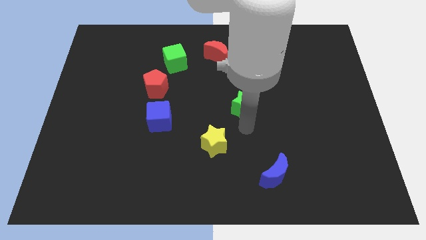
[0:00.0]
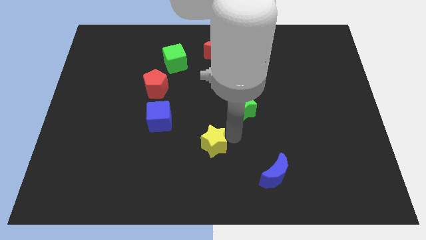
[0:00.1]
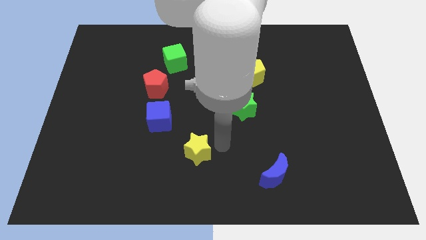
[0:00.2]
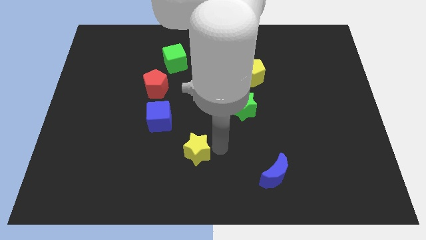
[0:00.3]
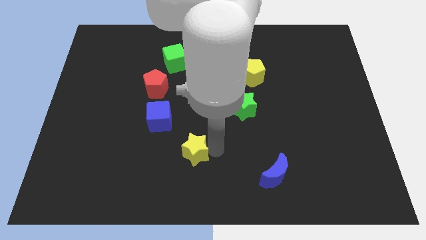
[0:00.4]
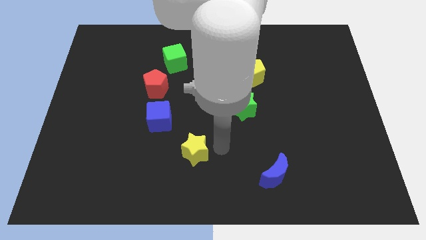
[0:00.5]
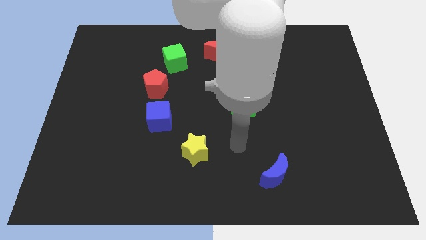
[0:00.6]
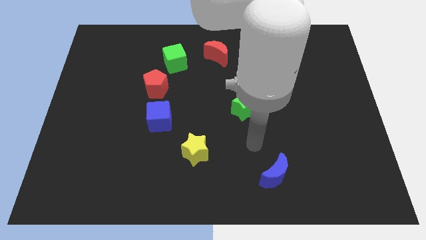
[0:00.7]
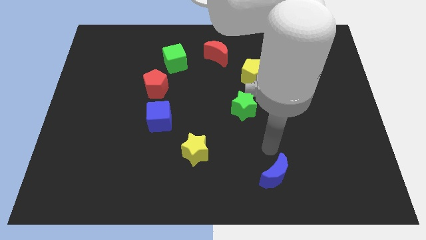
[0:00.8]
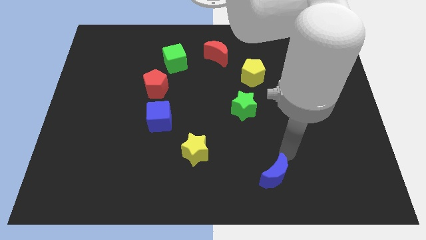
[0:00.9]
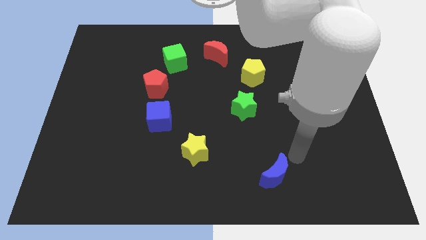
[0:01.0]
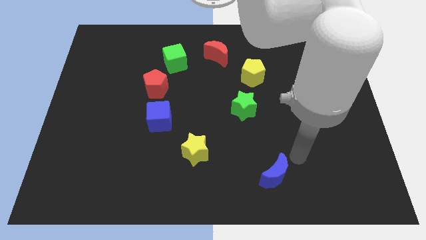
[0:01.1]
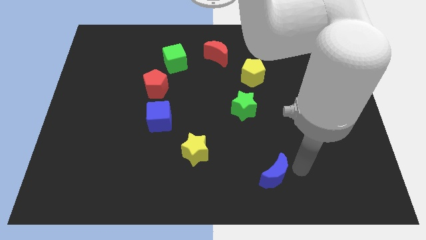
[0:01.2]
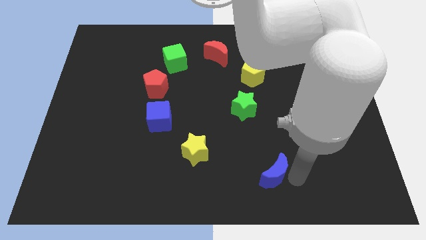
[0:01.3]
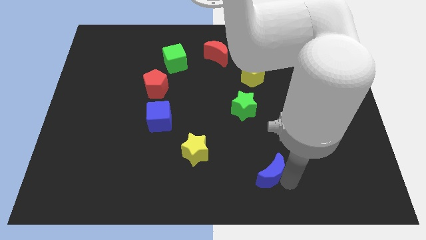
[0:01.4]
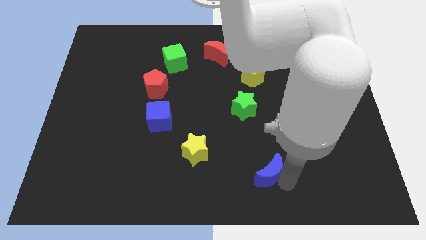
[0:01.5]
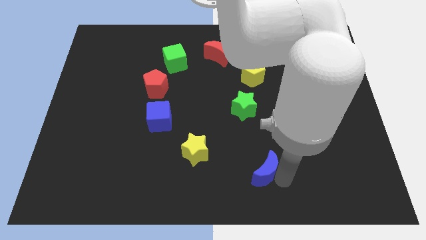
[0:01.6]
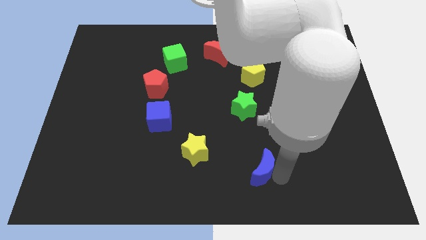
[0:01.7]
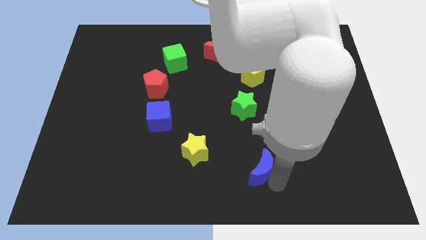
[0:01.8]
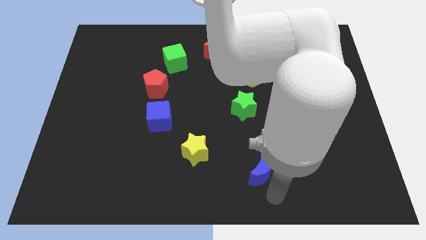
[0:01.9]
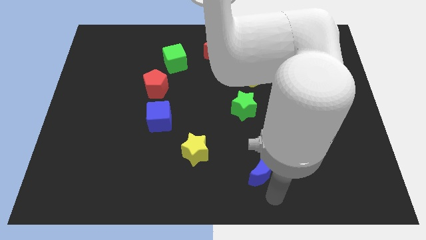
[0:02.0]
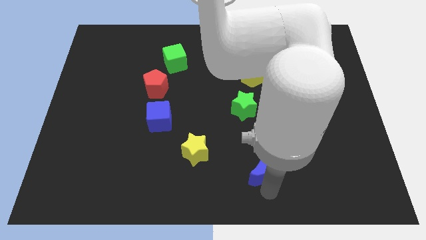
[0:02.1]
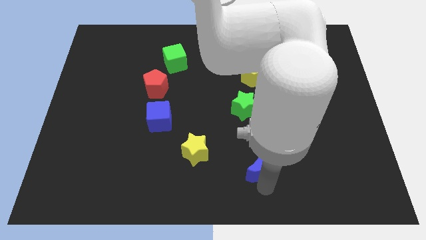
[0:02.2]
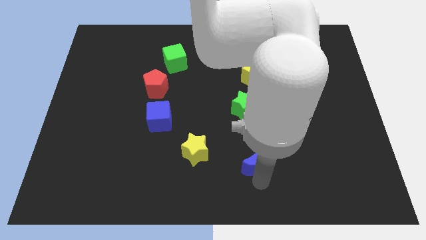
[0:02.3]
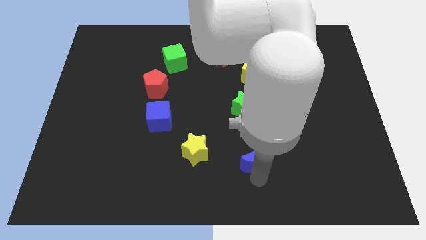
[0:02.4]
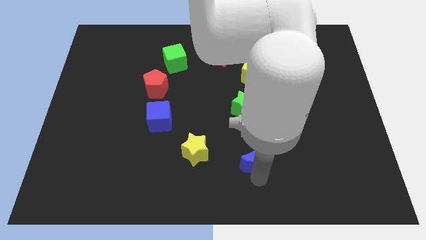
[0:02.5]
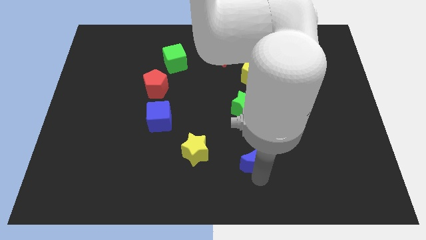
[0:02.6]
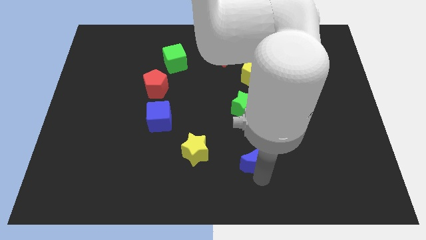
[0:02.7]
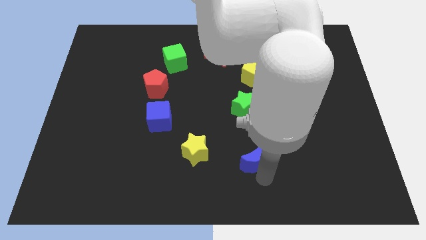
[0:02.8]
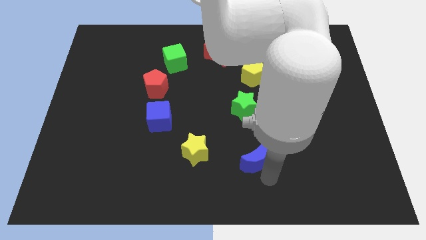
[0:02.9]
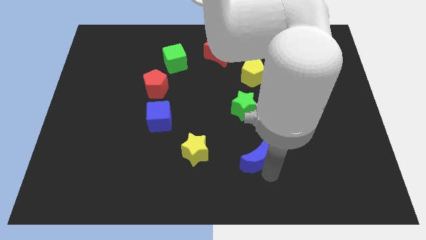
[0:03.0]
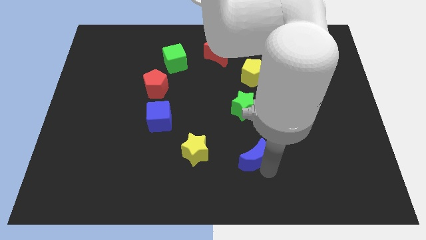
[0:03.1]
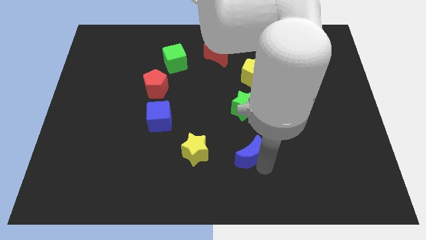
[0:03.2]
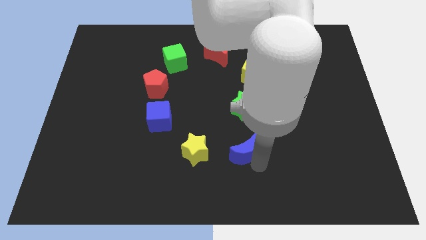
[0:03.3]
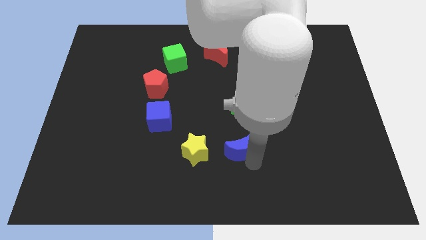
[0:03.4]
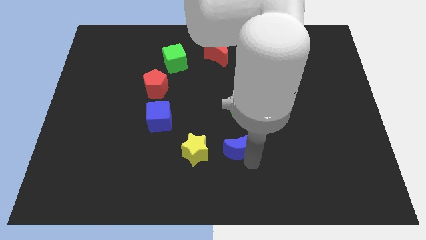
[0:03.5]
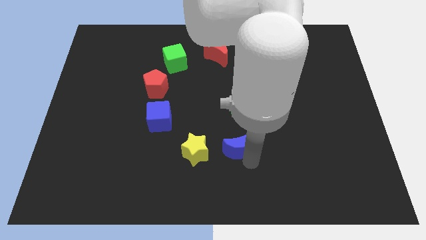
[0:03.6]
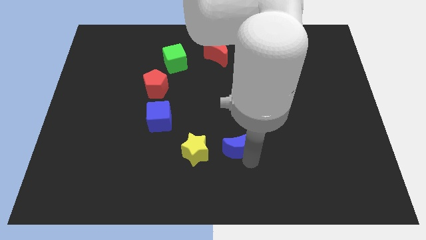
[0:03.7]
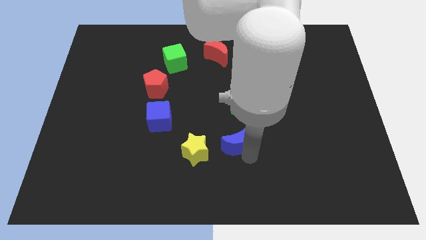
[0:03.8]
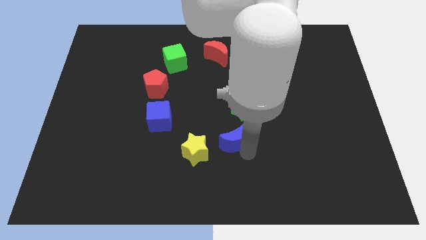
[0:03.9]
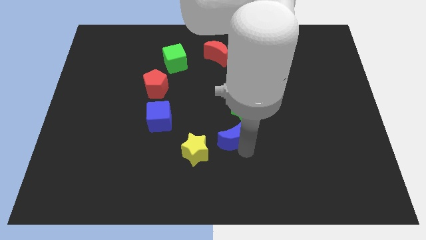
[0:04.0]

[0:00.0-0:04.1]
drag the blue crescent to the bottom left of the green star

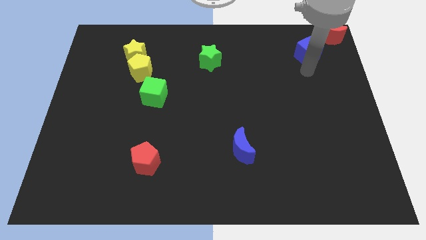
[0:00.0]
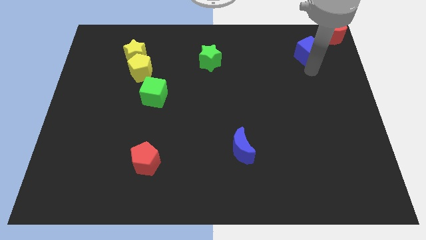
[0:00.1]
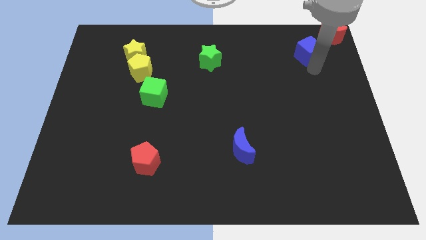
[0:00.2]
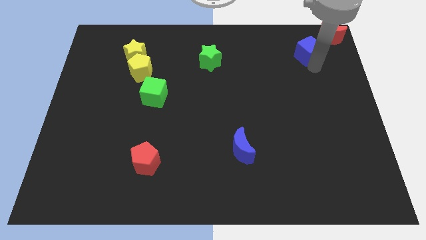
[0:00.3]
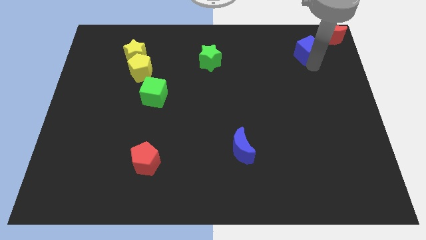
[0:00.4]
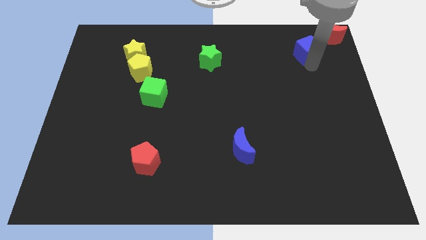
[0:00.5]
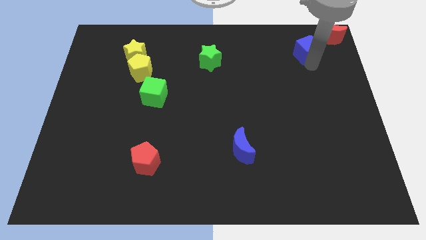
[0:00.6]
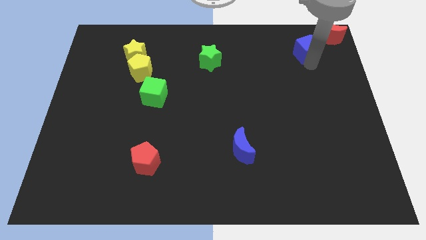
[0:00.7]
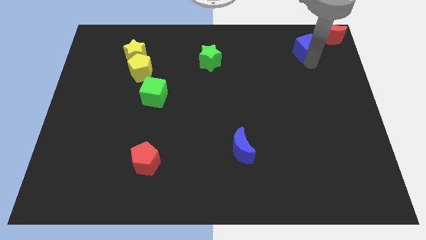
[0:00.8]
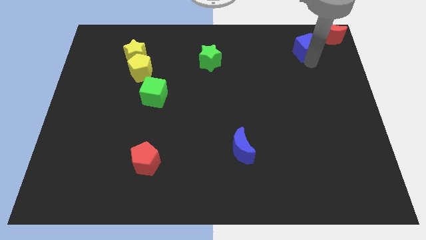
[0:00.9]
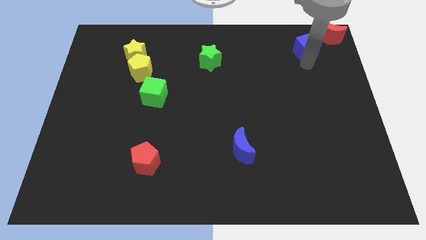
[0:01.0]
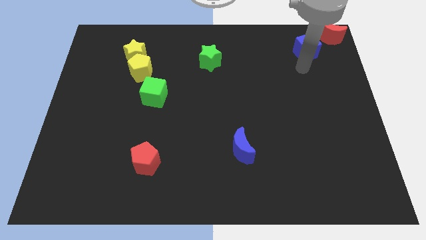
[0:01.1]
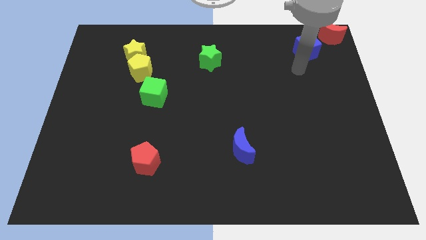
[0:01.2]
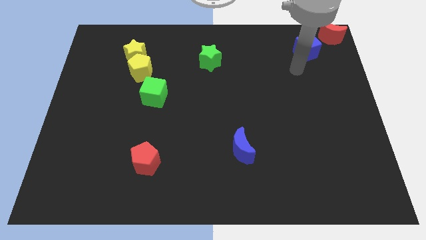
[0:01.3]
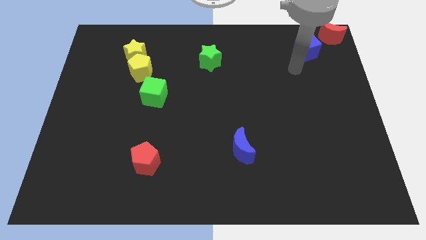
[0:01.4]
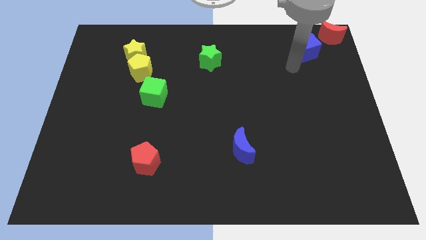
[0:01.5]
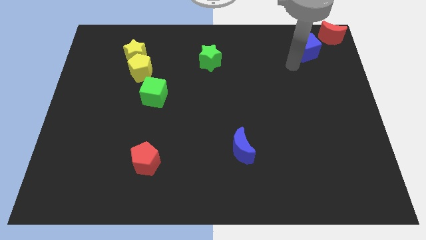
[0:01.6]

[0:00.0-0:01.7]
push the blue cube towards the bottom left corner of the red crescent

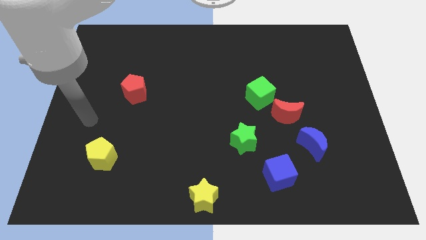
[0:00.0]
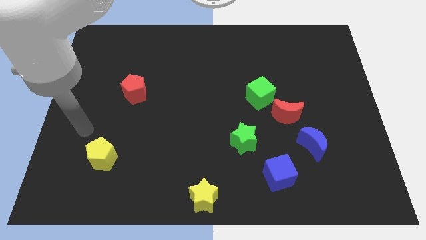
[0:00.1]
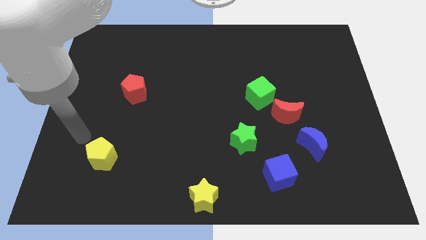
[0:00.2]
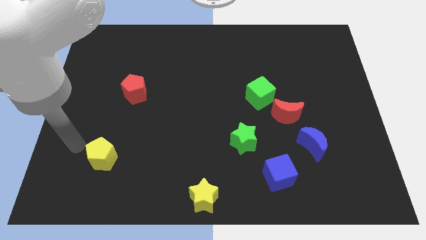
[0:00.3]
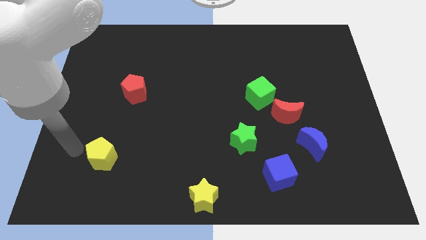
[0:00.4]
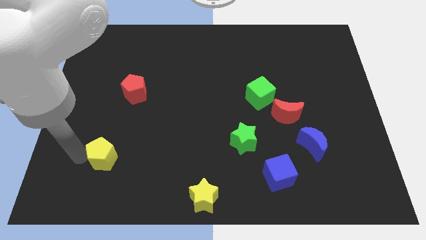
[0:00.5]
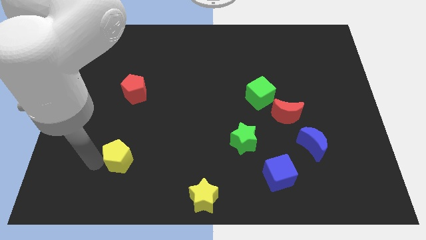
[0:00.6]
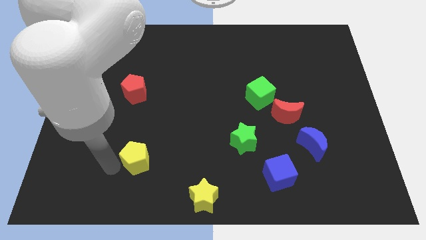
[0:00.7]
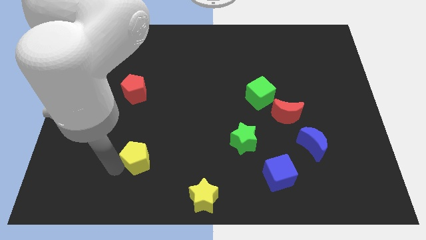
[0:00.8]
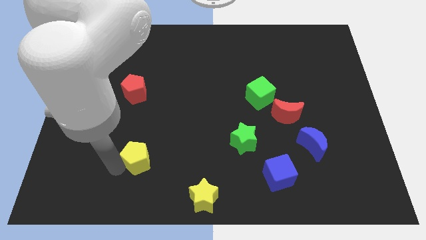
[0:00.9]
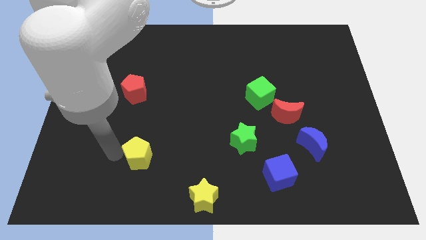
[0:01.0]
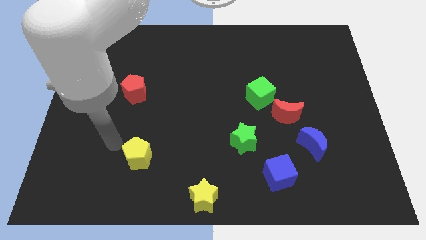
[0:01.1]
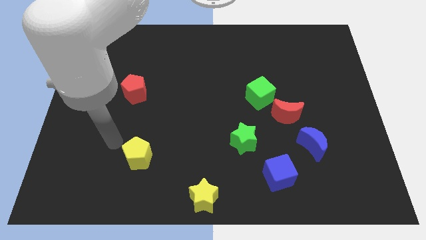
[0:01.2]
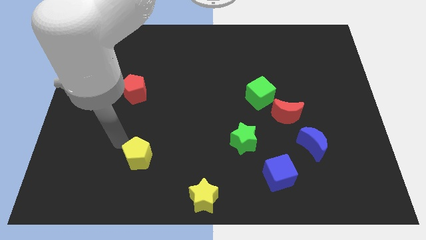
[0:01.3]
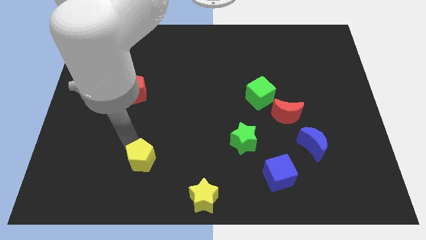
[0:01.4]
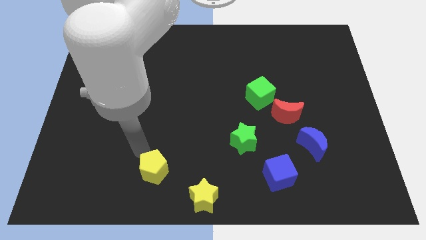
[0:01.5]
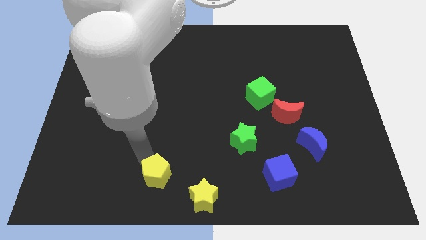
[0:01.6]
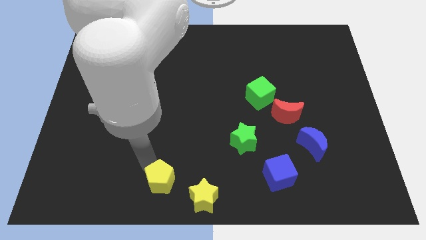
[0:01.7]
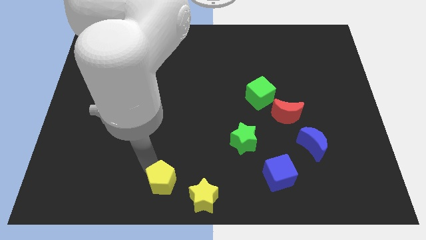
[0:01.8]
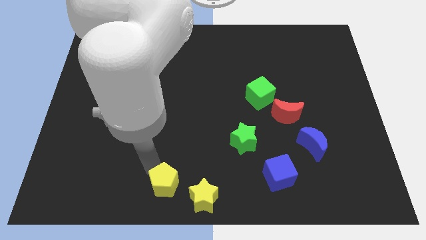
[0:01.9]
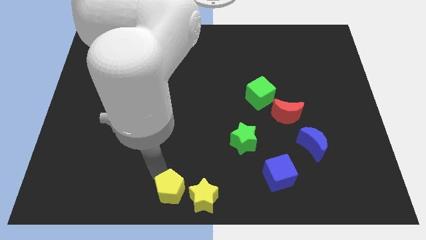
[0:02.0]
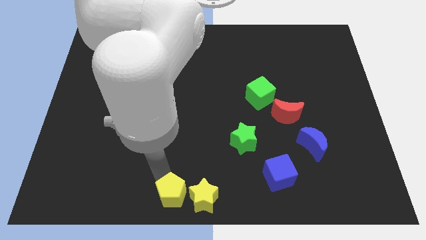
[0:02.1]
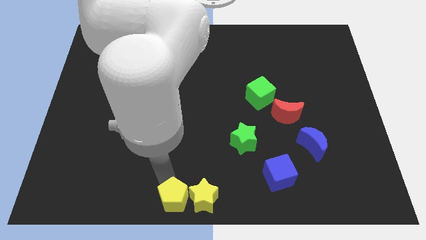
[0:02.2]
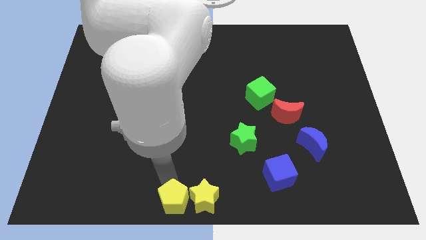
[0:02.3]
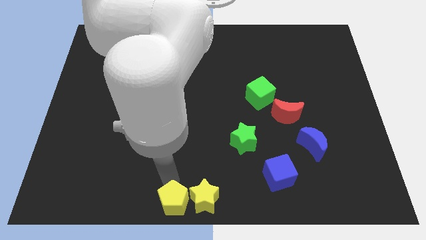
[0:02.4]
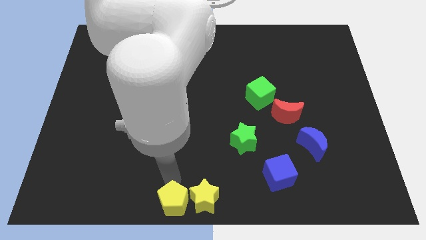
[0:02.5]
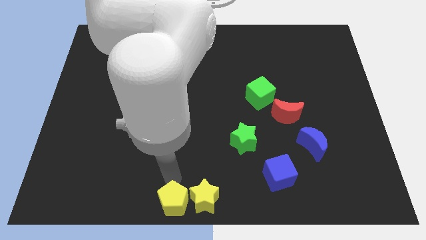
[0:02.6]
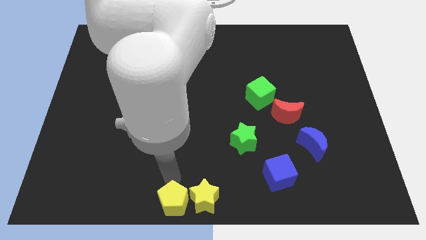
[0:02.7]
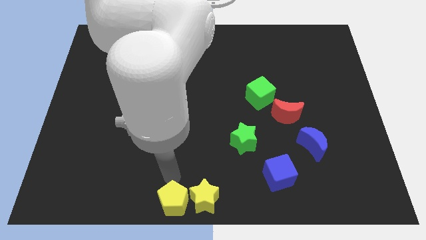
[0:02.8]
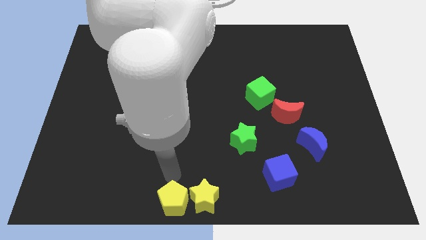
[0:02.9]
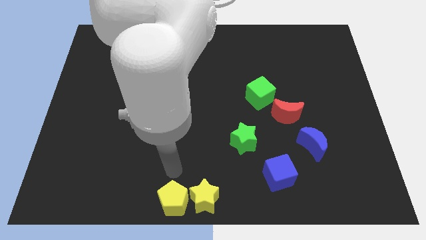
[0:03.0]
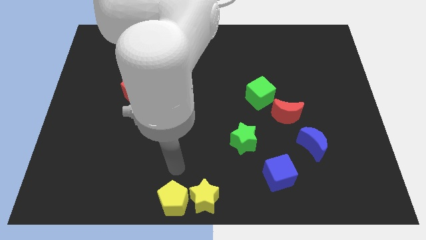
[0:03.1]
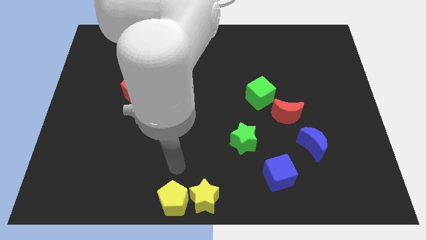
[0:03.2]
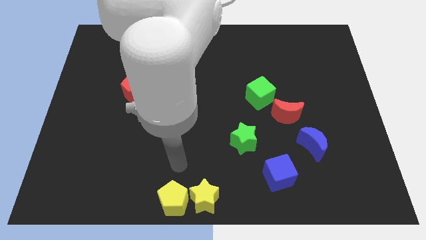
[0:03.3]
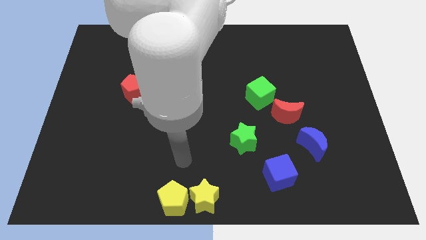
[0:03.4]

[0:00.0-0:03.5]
place the yellow pentagon to the left side of the yellow star
